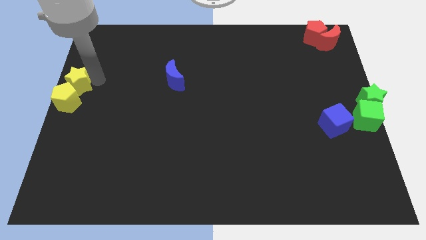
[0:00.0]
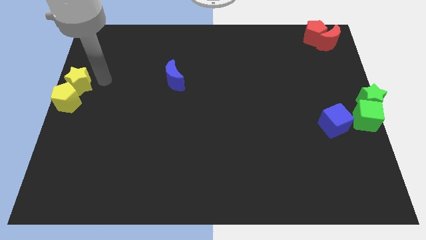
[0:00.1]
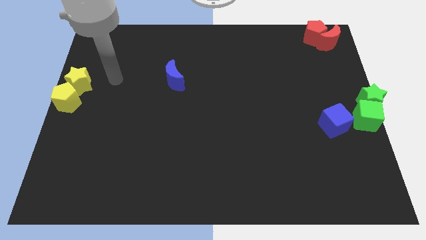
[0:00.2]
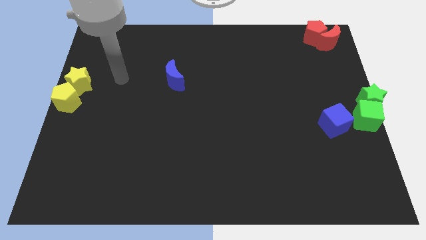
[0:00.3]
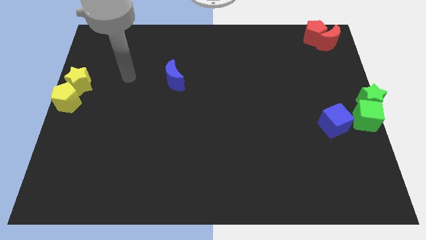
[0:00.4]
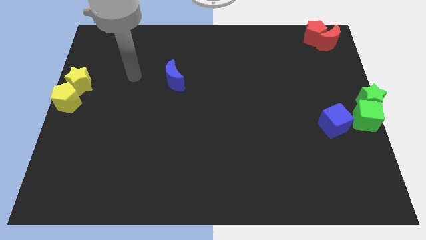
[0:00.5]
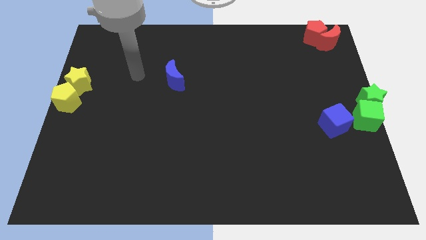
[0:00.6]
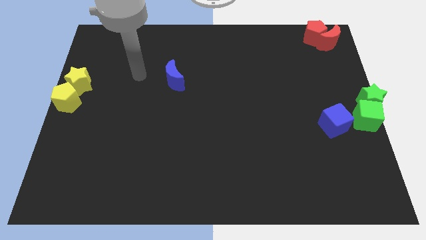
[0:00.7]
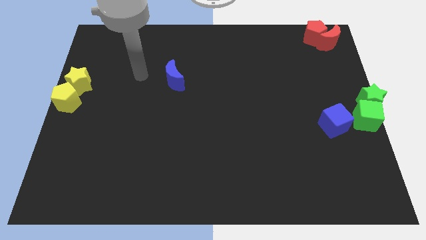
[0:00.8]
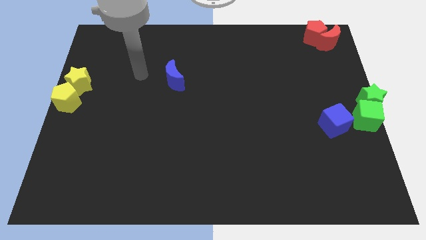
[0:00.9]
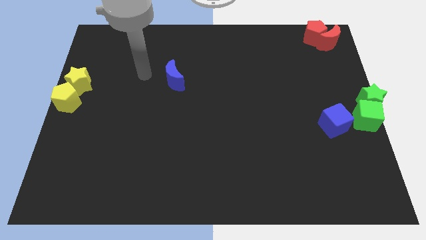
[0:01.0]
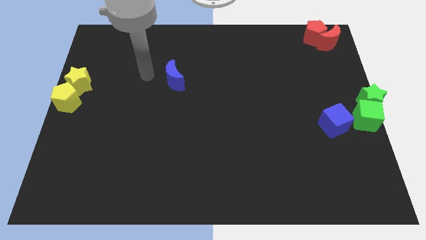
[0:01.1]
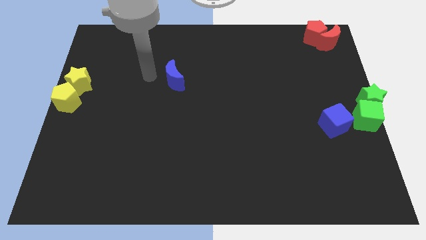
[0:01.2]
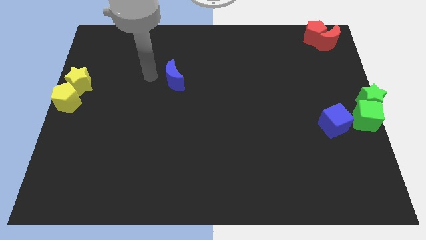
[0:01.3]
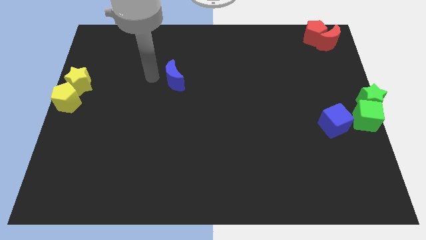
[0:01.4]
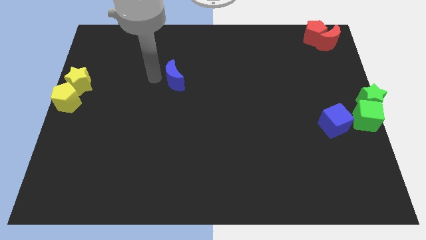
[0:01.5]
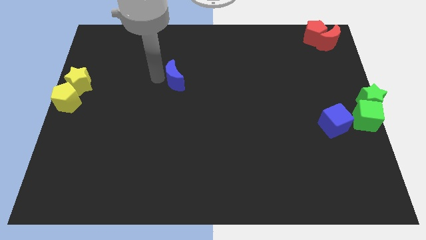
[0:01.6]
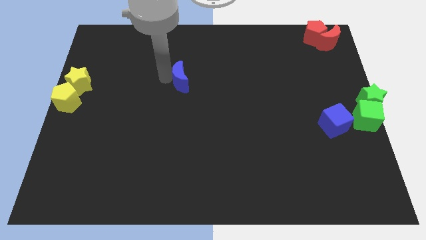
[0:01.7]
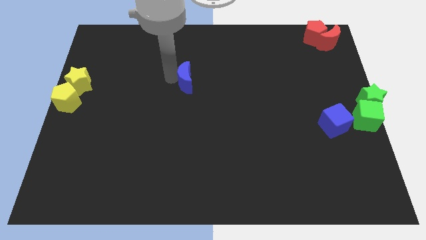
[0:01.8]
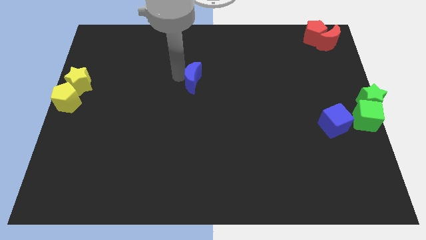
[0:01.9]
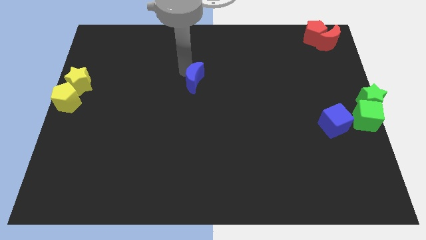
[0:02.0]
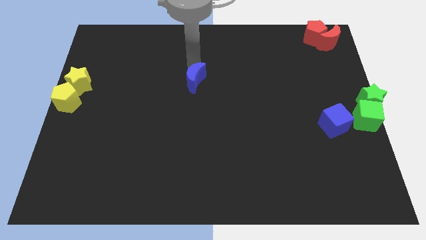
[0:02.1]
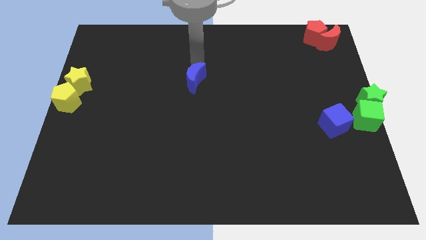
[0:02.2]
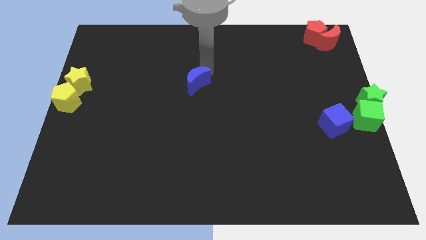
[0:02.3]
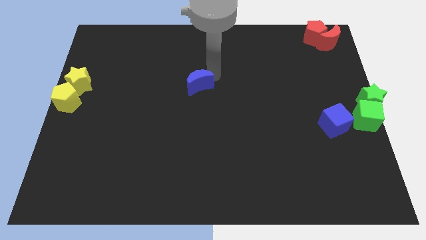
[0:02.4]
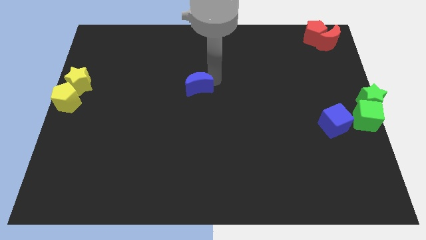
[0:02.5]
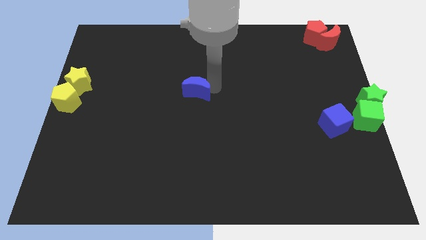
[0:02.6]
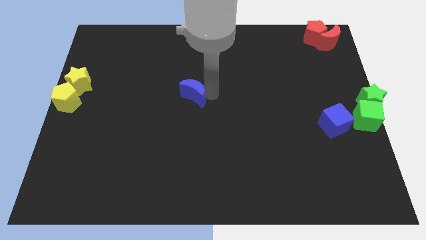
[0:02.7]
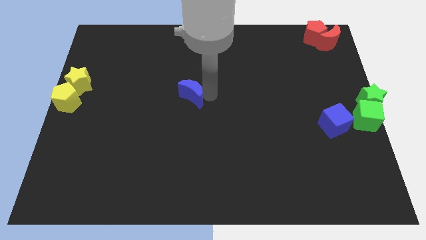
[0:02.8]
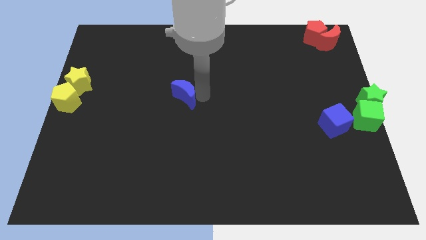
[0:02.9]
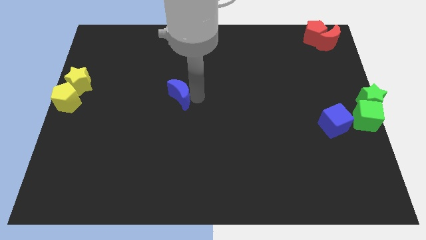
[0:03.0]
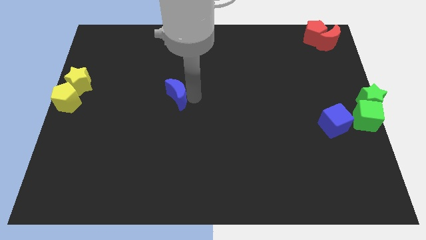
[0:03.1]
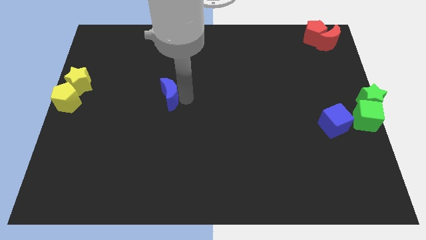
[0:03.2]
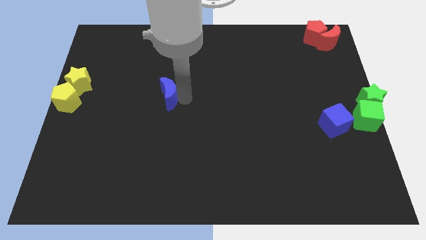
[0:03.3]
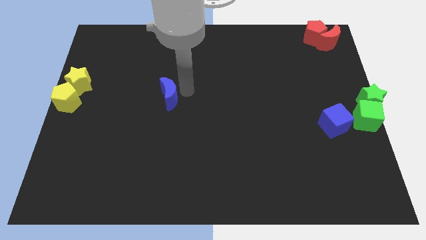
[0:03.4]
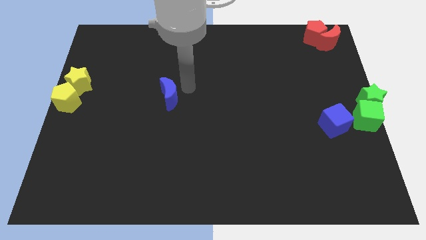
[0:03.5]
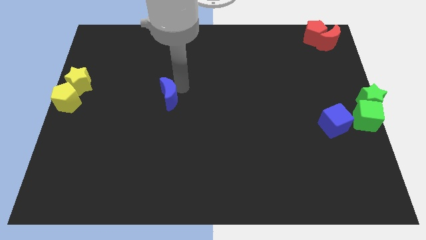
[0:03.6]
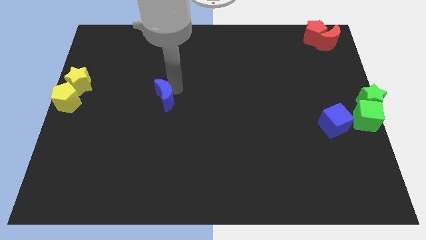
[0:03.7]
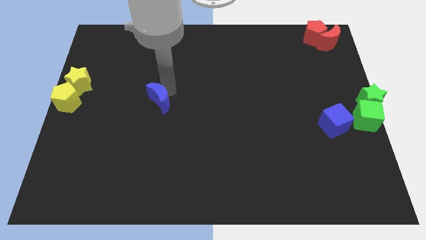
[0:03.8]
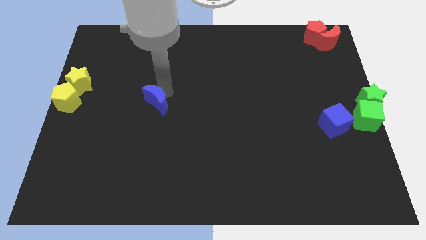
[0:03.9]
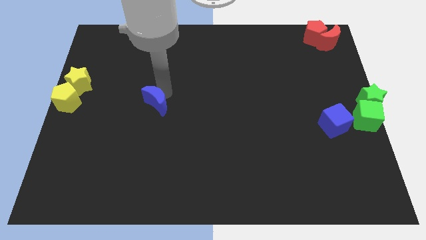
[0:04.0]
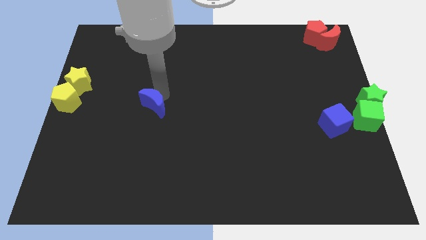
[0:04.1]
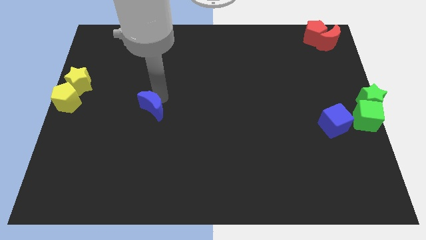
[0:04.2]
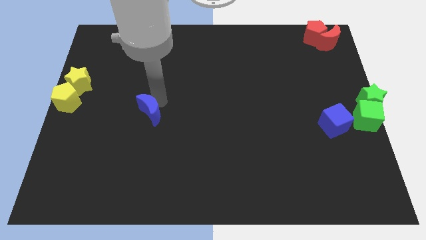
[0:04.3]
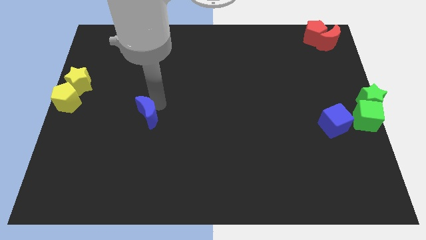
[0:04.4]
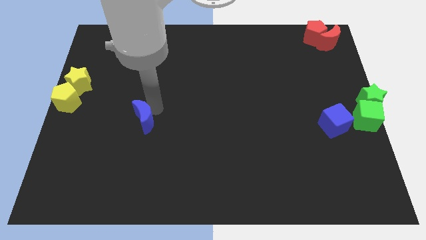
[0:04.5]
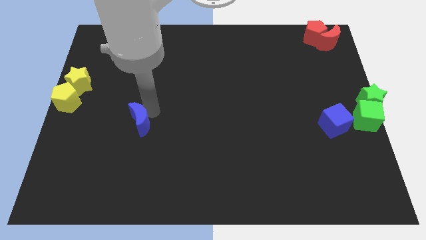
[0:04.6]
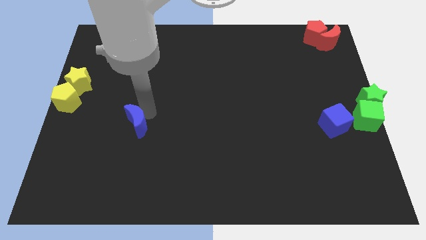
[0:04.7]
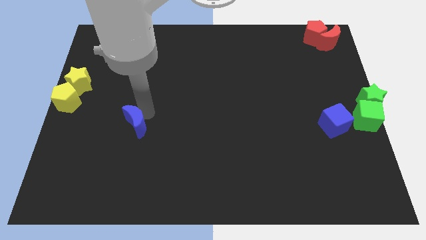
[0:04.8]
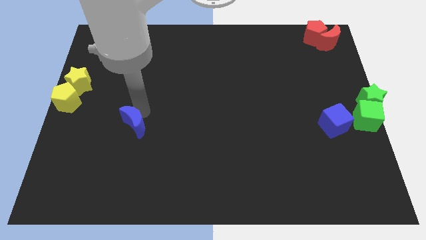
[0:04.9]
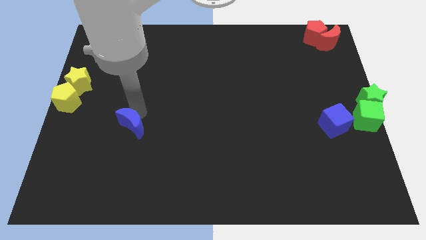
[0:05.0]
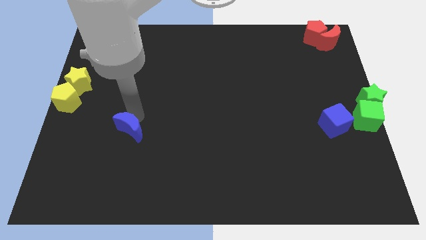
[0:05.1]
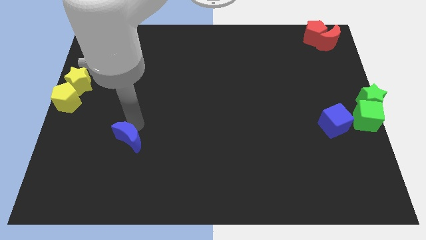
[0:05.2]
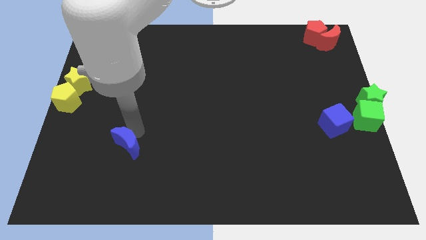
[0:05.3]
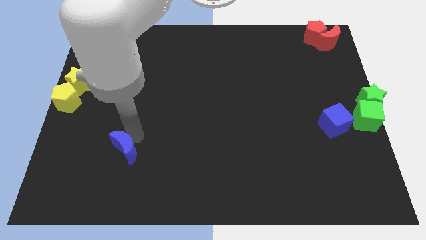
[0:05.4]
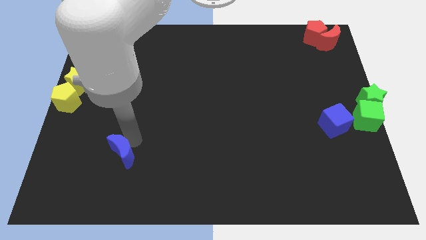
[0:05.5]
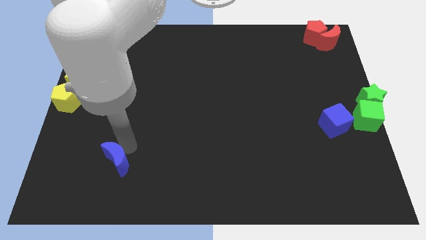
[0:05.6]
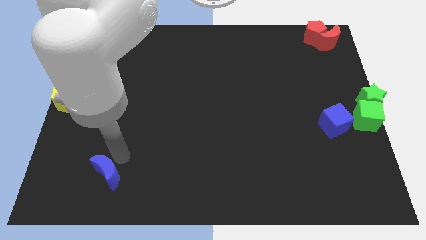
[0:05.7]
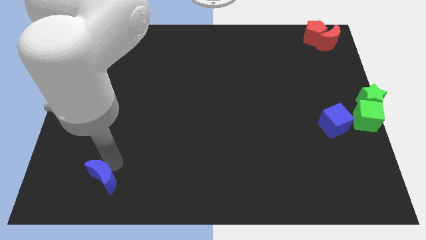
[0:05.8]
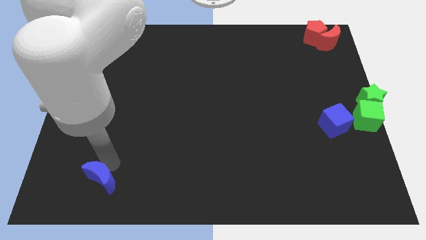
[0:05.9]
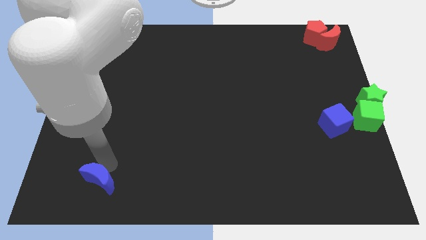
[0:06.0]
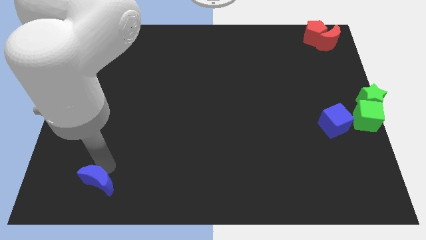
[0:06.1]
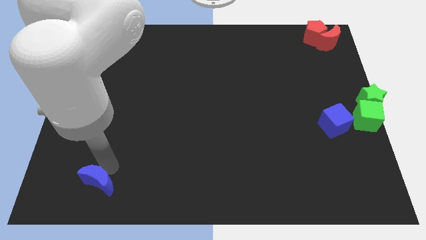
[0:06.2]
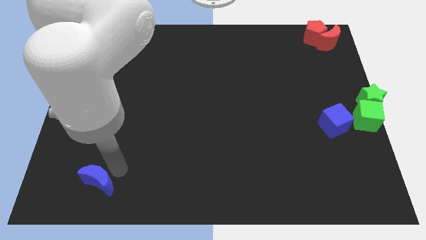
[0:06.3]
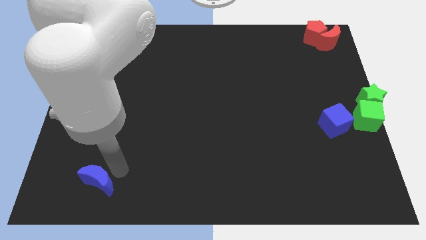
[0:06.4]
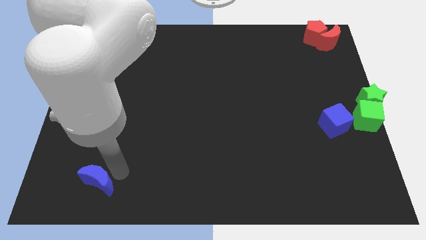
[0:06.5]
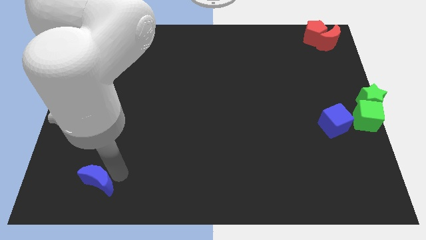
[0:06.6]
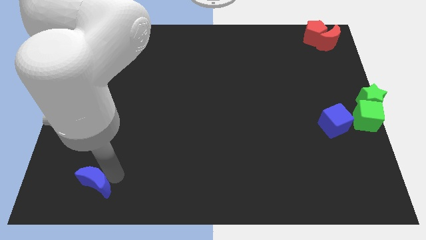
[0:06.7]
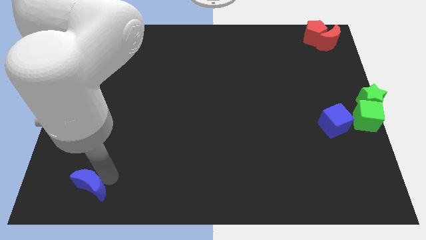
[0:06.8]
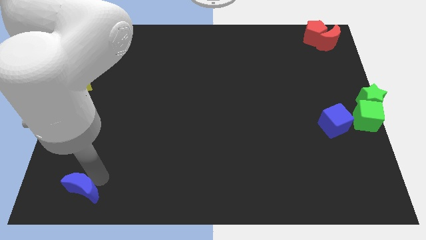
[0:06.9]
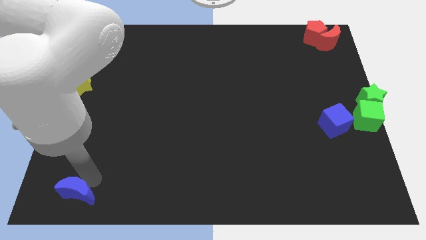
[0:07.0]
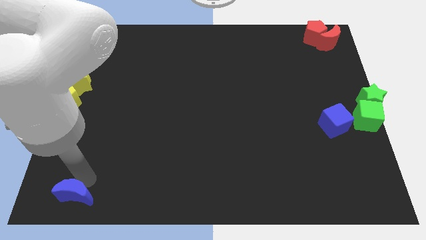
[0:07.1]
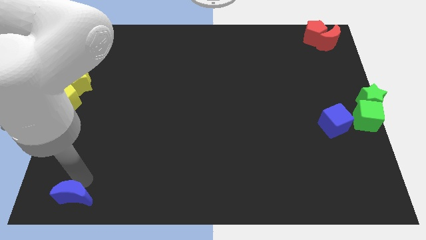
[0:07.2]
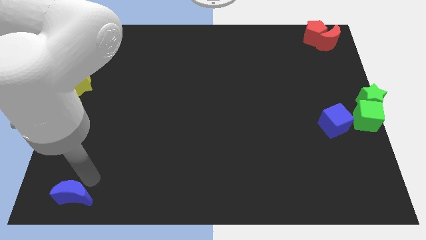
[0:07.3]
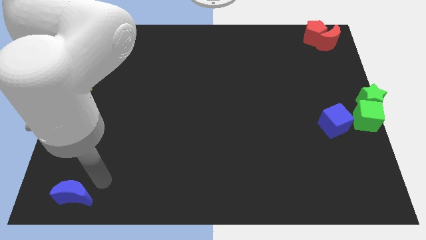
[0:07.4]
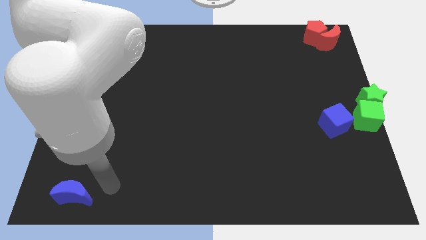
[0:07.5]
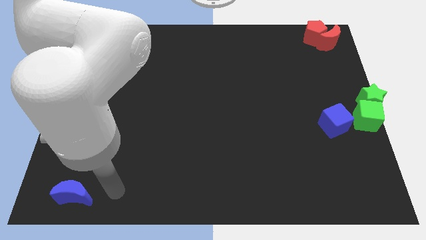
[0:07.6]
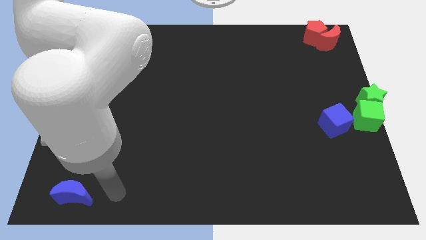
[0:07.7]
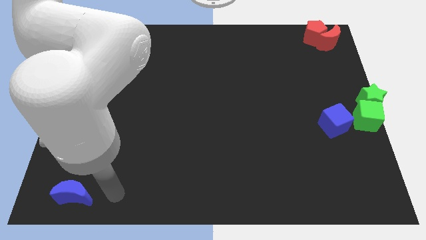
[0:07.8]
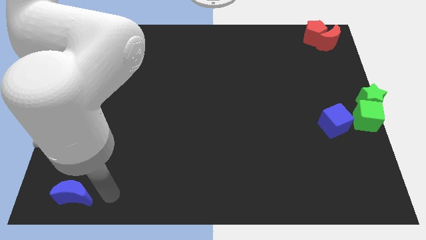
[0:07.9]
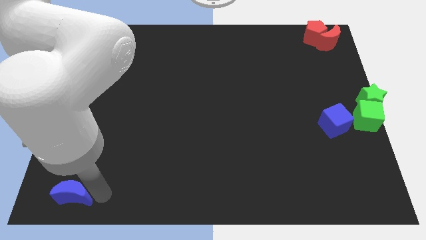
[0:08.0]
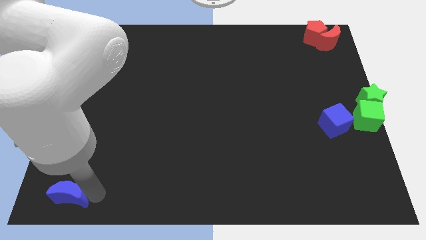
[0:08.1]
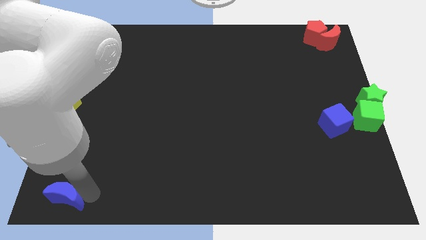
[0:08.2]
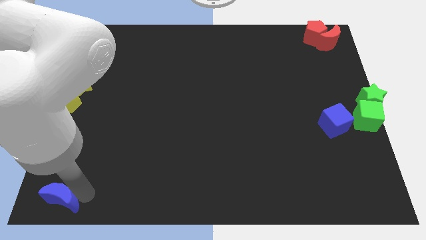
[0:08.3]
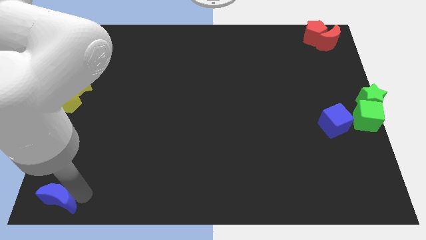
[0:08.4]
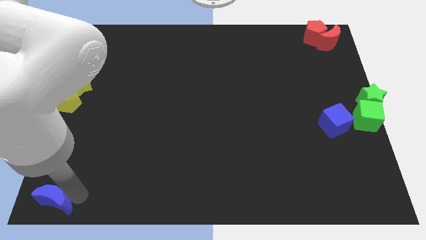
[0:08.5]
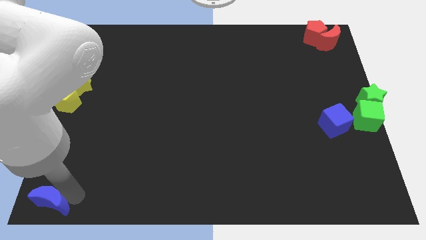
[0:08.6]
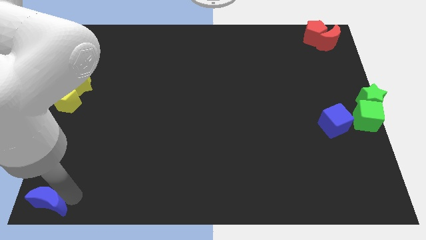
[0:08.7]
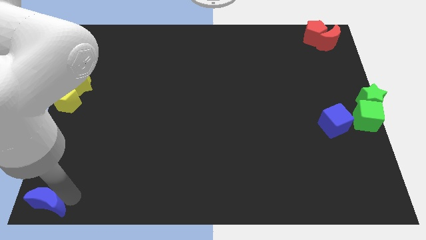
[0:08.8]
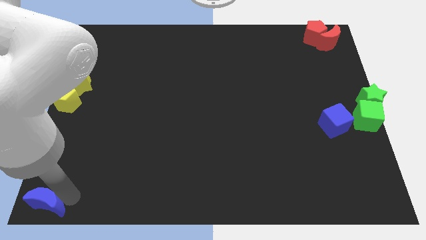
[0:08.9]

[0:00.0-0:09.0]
push the blue crescent down towards the bottom left corner of the board
